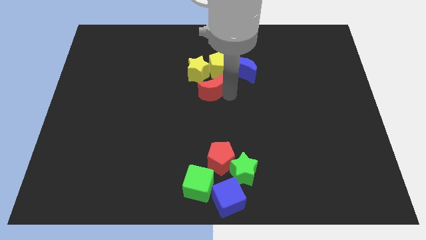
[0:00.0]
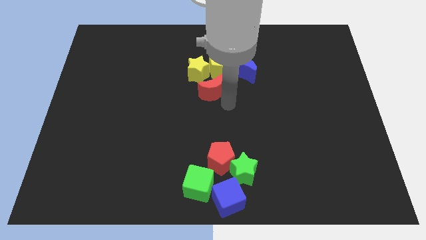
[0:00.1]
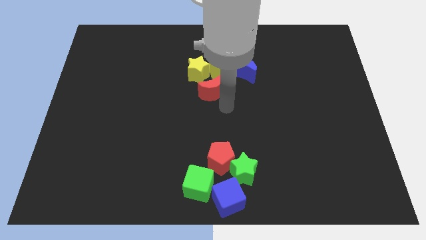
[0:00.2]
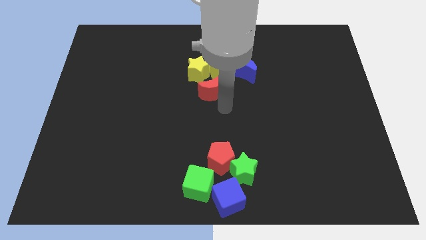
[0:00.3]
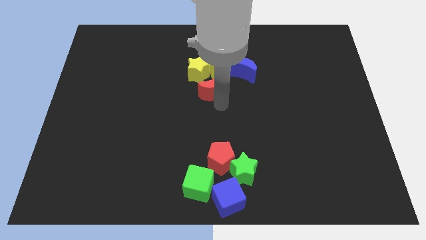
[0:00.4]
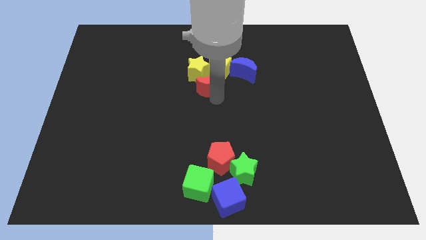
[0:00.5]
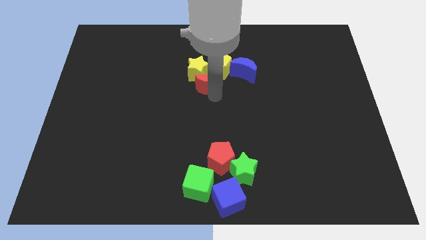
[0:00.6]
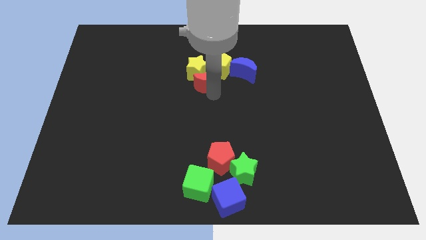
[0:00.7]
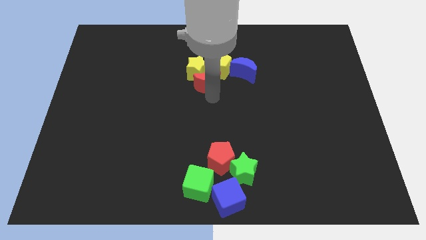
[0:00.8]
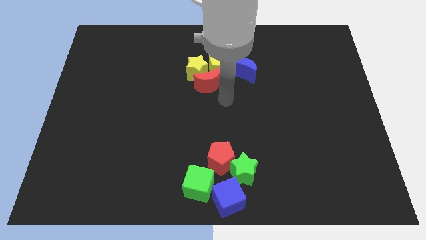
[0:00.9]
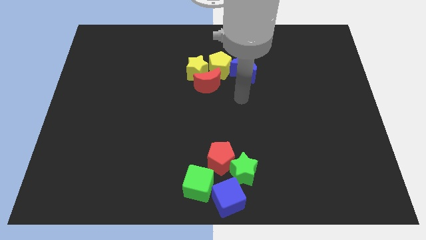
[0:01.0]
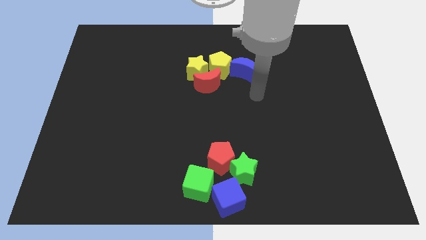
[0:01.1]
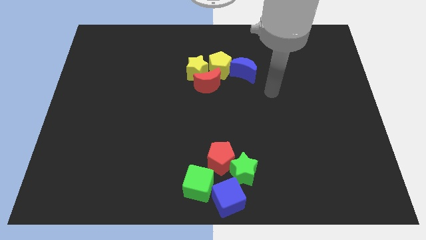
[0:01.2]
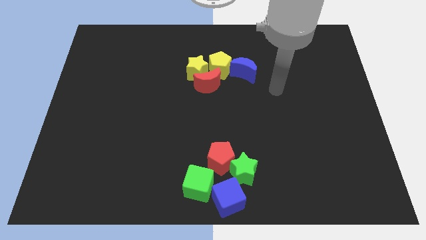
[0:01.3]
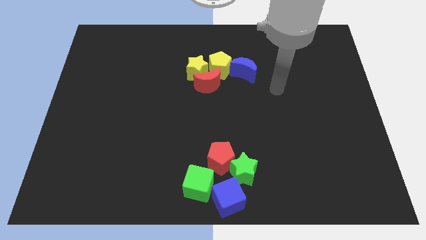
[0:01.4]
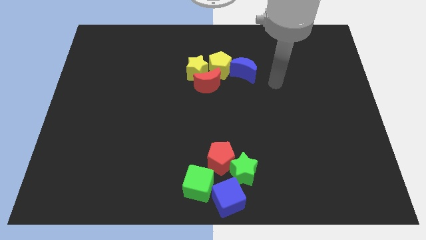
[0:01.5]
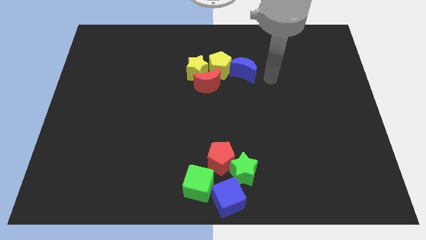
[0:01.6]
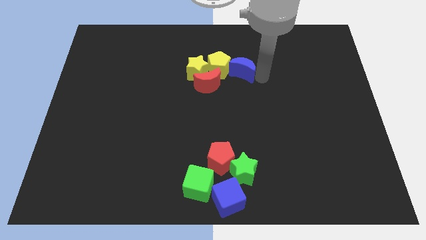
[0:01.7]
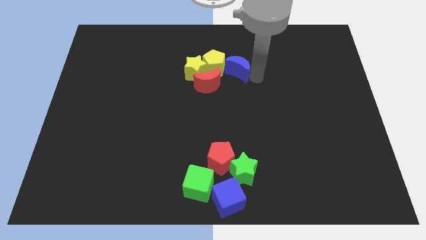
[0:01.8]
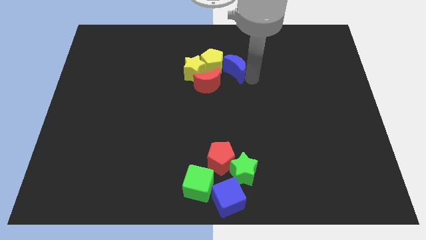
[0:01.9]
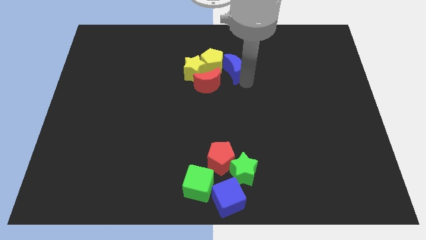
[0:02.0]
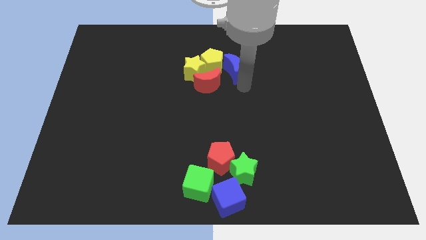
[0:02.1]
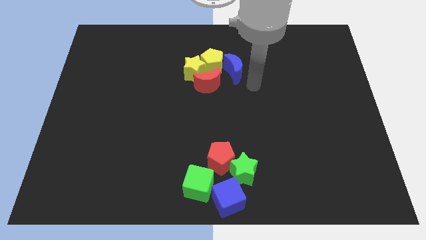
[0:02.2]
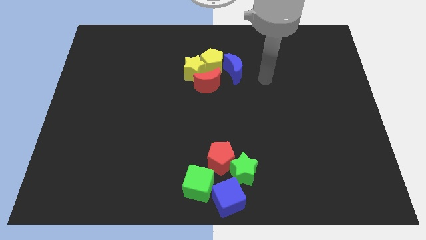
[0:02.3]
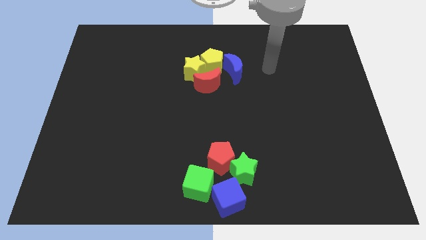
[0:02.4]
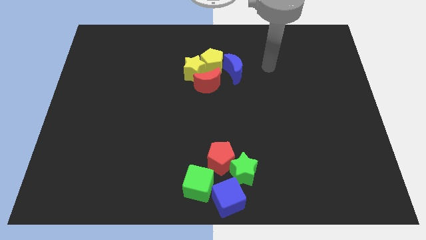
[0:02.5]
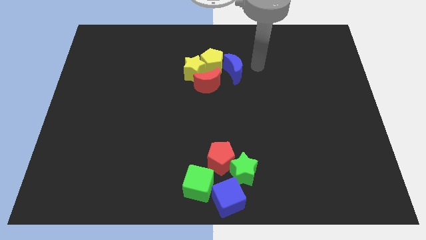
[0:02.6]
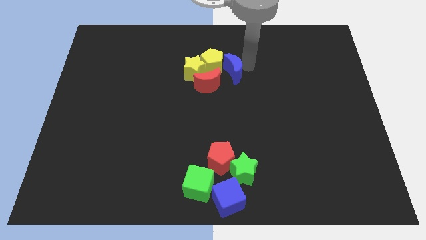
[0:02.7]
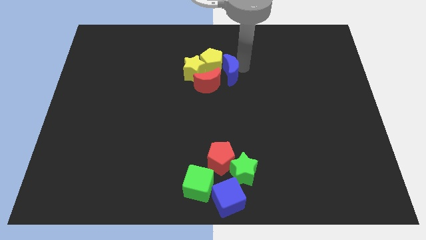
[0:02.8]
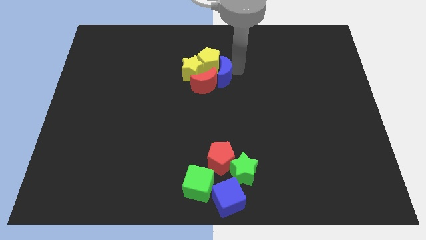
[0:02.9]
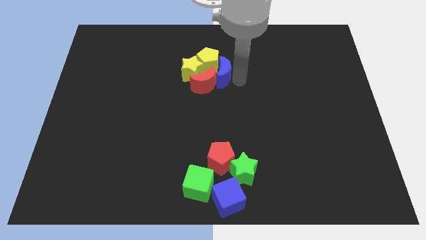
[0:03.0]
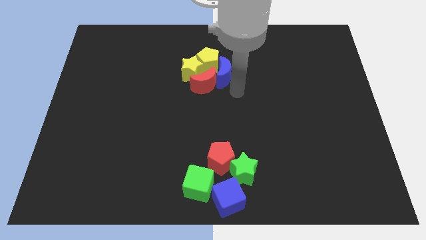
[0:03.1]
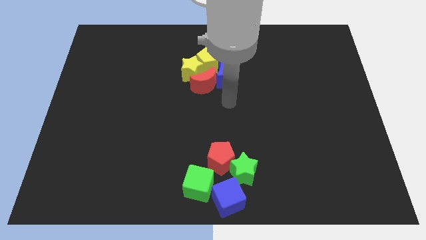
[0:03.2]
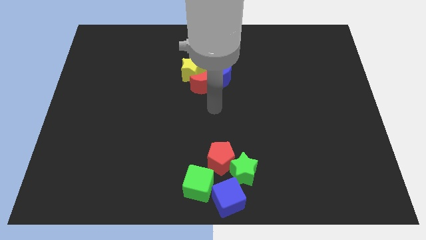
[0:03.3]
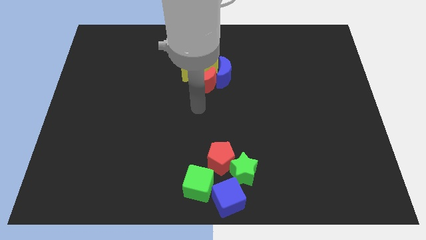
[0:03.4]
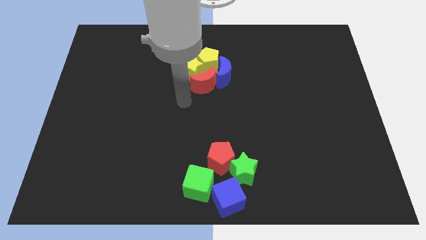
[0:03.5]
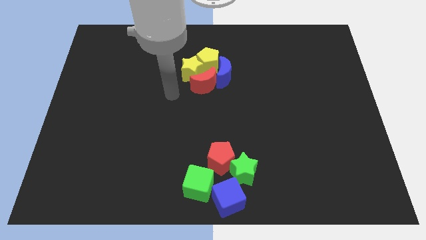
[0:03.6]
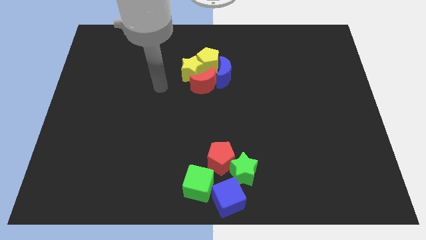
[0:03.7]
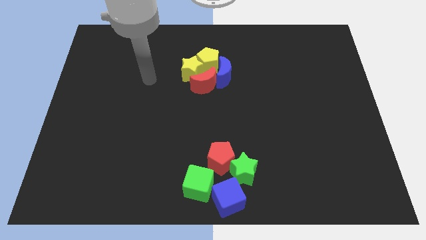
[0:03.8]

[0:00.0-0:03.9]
adjust the red and blue moon into the group of blocks

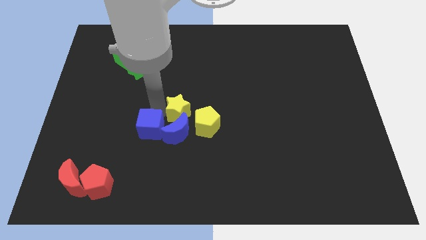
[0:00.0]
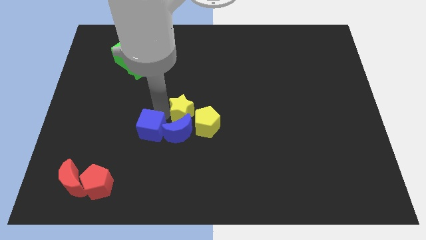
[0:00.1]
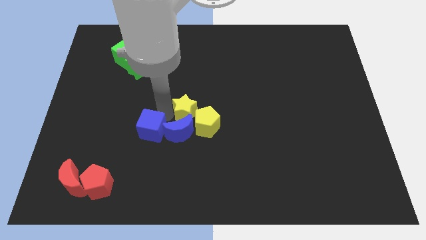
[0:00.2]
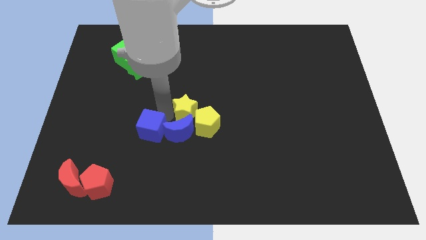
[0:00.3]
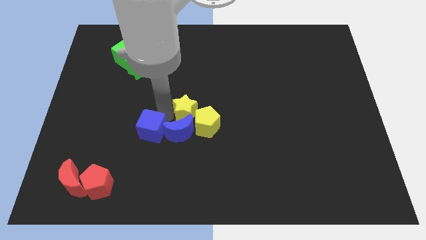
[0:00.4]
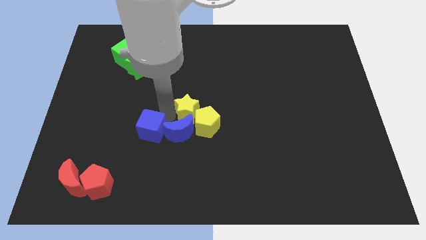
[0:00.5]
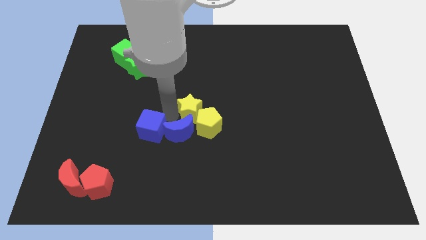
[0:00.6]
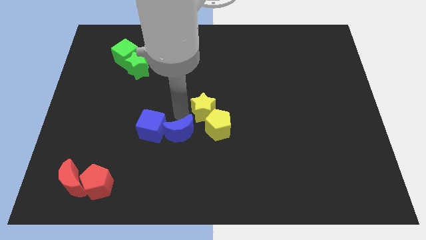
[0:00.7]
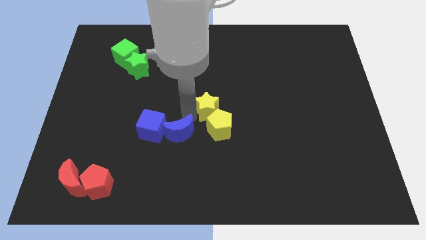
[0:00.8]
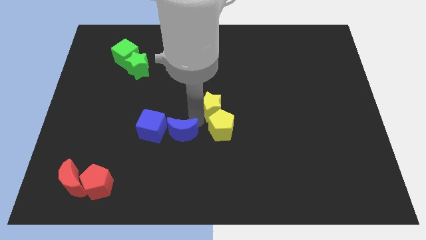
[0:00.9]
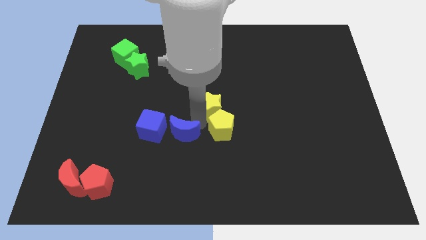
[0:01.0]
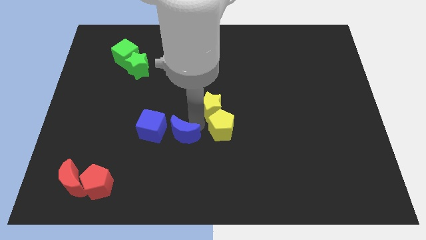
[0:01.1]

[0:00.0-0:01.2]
push the yellow star to the top left to the yellow pentagon

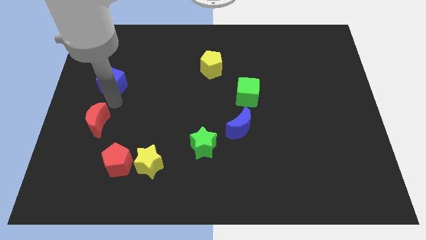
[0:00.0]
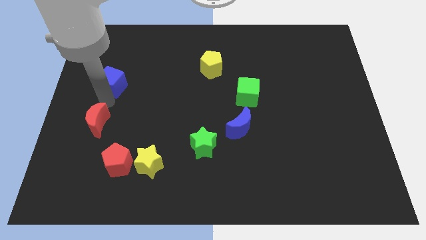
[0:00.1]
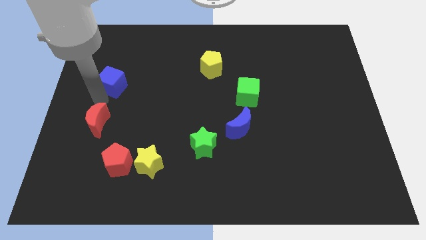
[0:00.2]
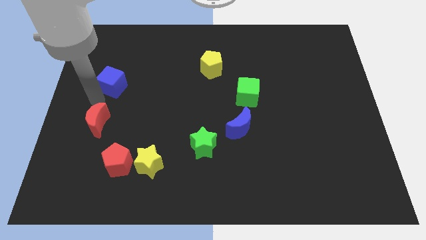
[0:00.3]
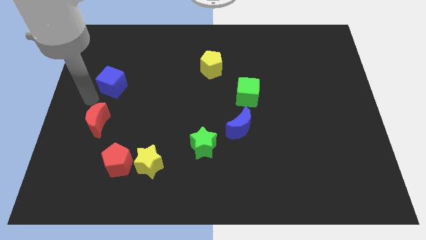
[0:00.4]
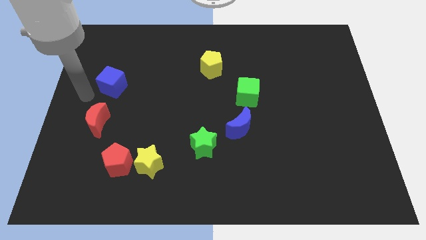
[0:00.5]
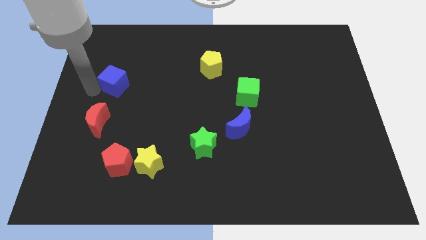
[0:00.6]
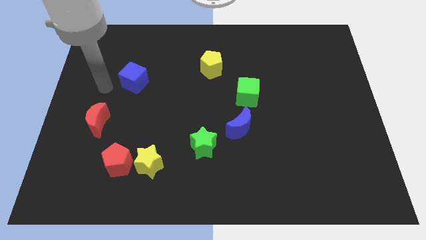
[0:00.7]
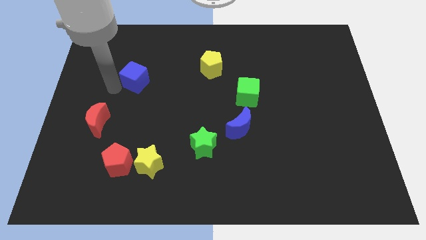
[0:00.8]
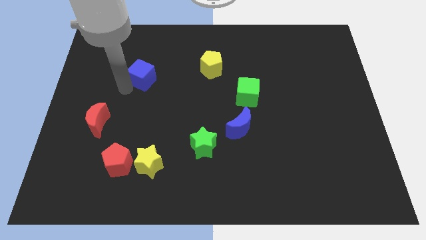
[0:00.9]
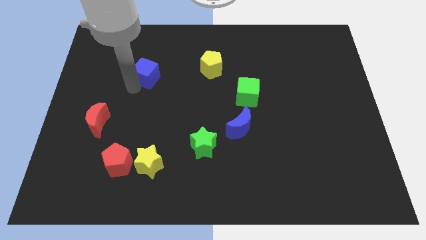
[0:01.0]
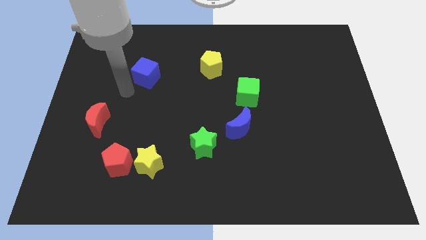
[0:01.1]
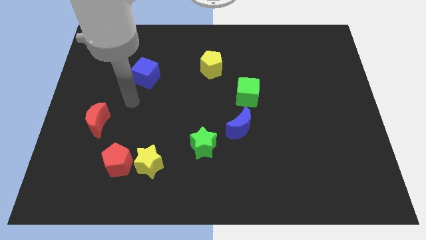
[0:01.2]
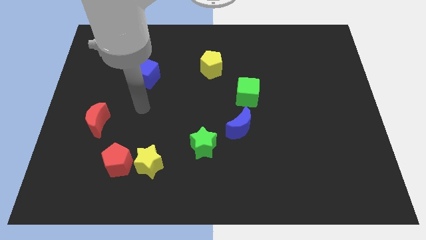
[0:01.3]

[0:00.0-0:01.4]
push the blue cube to the top of the board

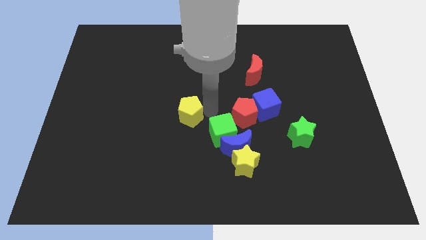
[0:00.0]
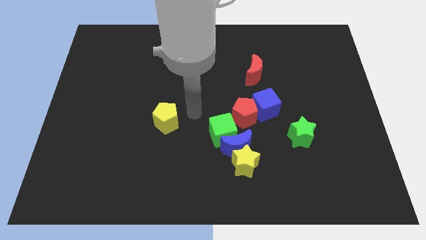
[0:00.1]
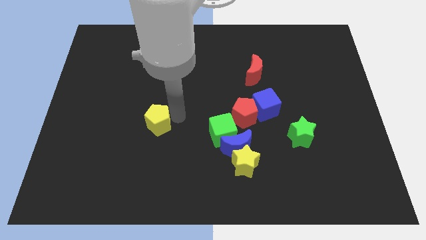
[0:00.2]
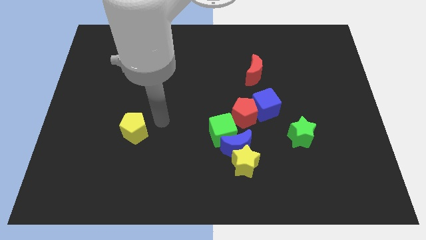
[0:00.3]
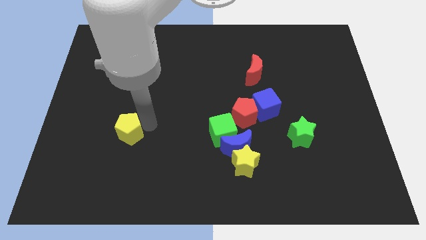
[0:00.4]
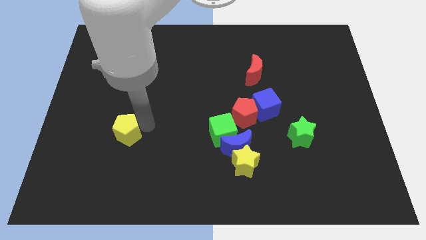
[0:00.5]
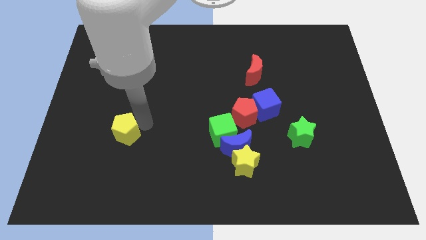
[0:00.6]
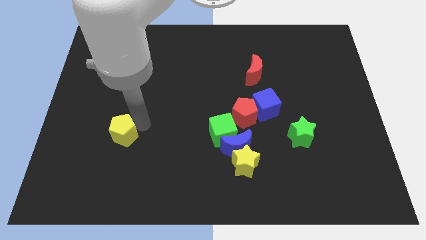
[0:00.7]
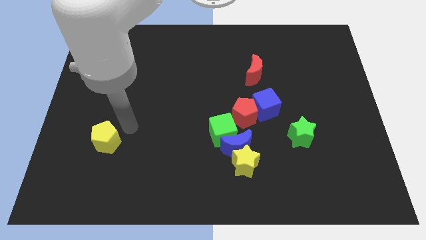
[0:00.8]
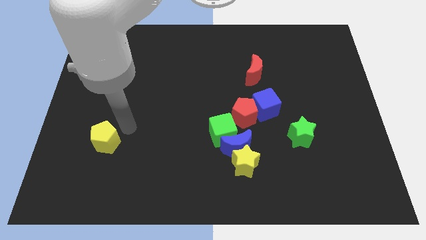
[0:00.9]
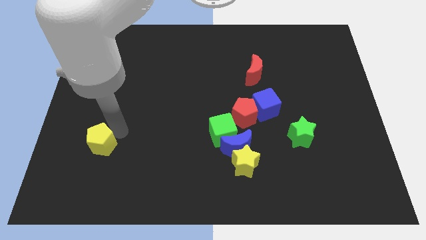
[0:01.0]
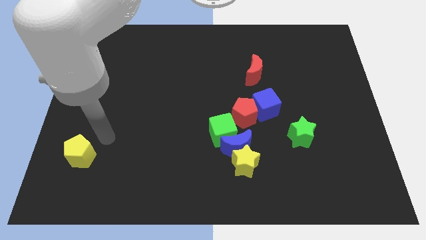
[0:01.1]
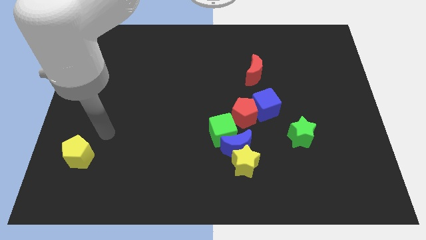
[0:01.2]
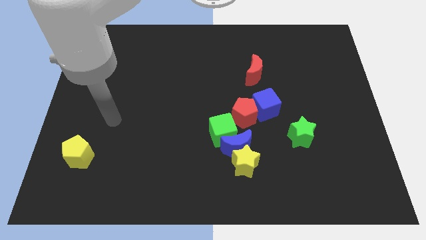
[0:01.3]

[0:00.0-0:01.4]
move yellow pentagon towards the bottom left of the board

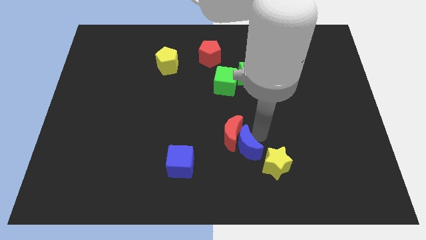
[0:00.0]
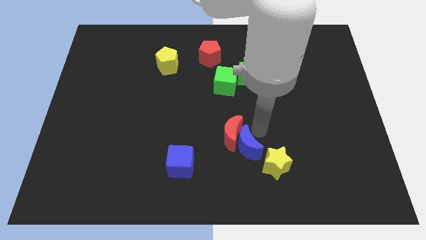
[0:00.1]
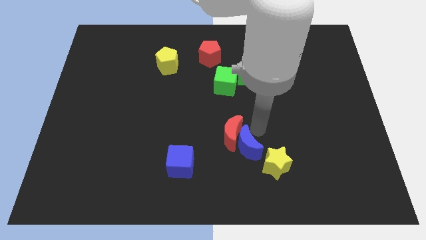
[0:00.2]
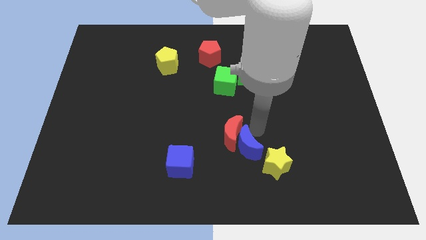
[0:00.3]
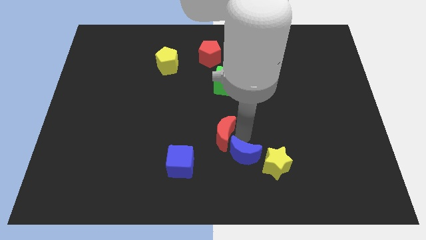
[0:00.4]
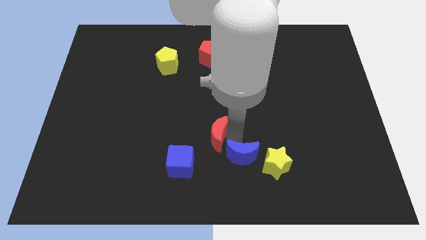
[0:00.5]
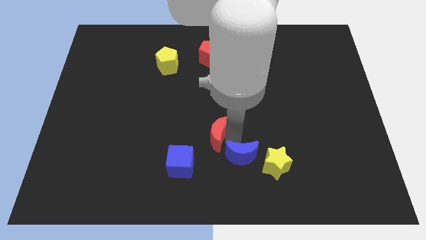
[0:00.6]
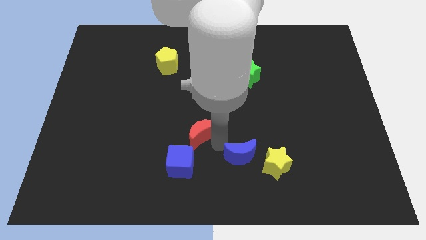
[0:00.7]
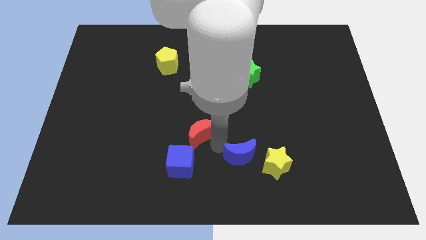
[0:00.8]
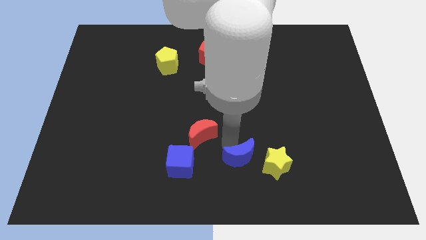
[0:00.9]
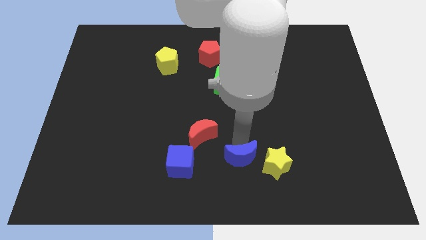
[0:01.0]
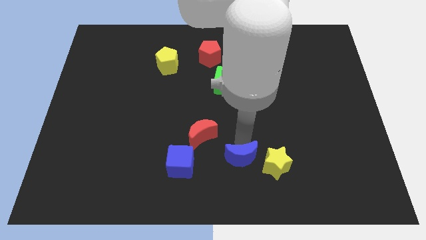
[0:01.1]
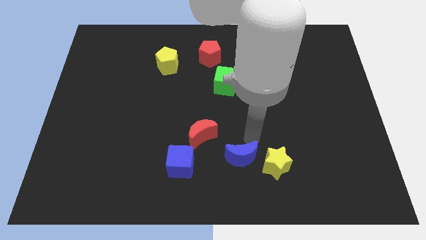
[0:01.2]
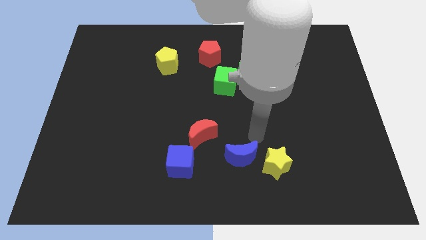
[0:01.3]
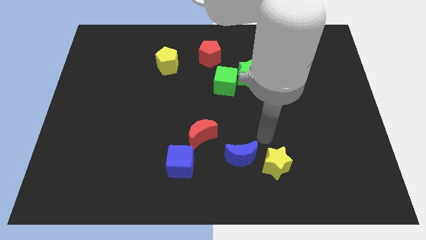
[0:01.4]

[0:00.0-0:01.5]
move the red crescent away from the blue crescent
